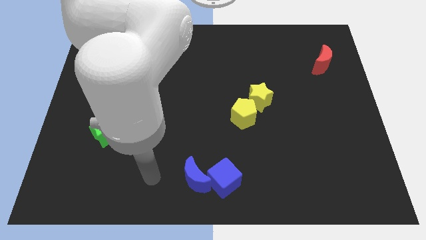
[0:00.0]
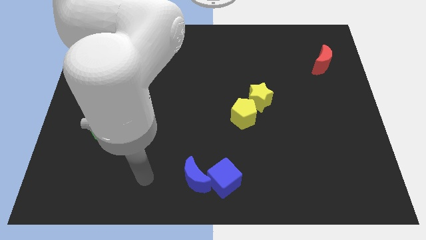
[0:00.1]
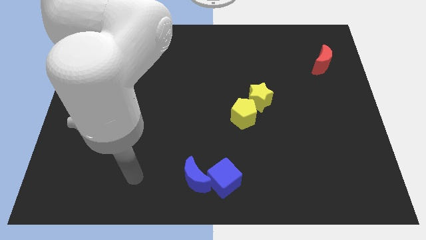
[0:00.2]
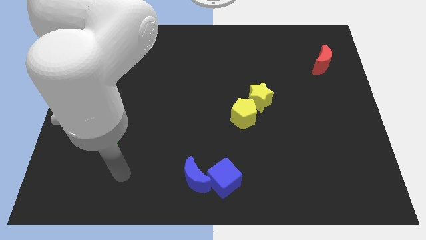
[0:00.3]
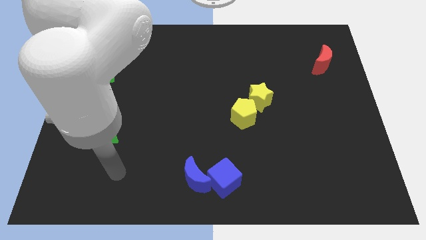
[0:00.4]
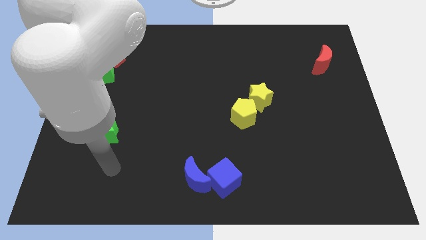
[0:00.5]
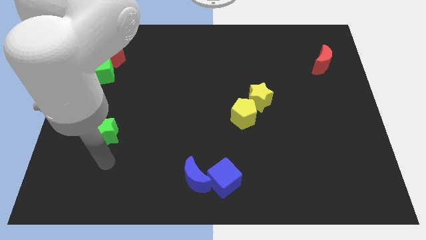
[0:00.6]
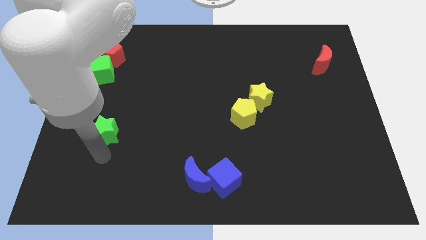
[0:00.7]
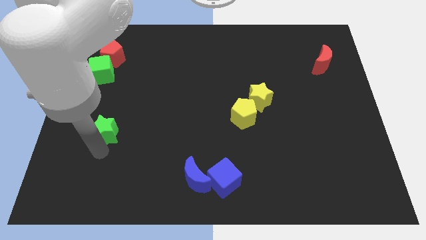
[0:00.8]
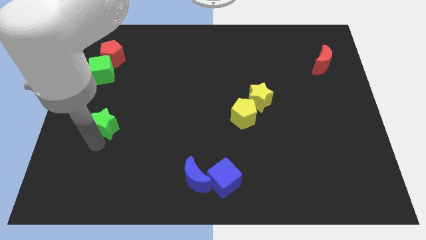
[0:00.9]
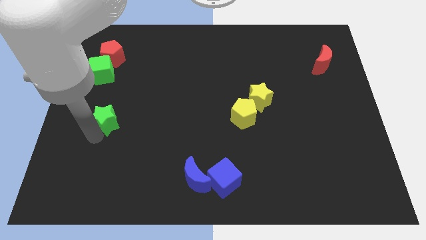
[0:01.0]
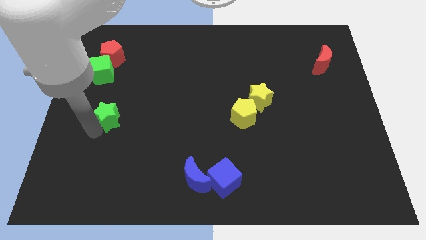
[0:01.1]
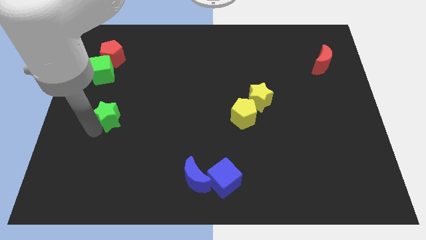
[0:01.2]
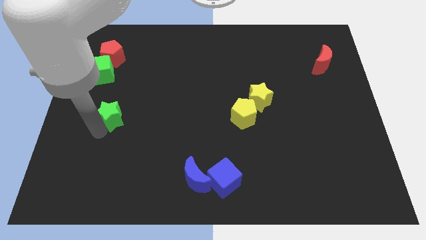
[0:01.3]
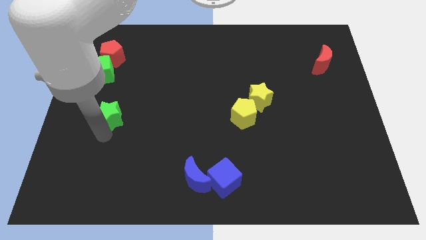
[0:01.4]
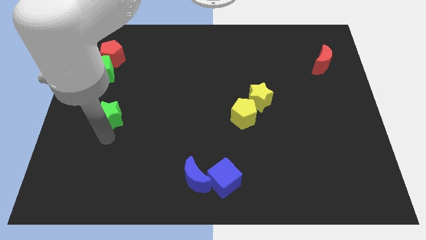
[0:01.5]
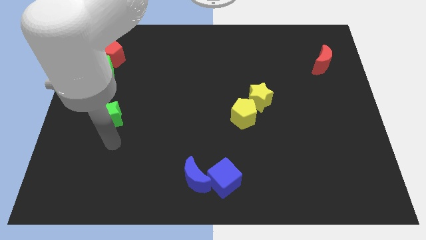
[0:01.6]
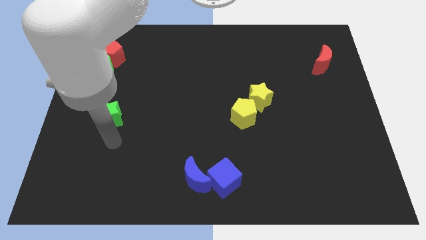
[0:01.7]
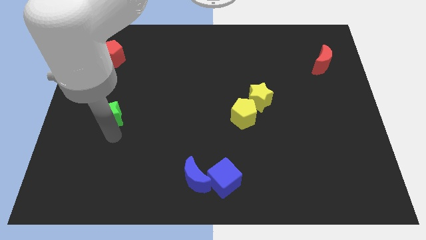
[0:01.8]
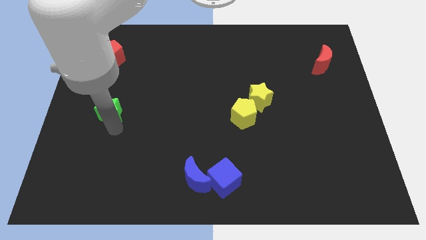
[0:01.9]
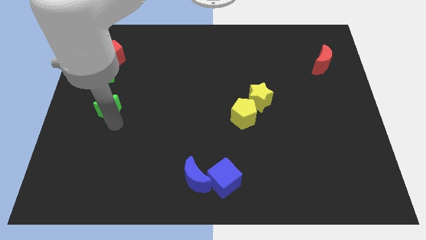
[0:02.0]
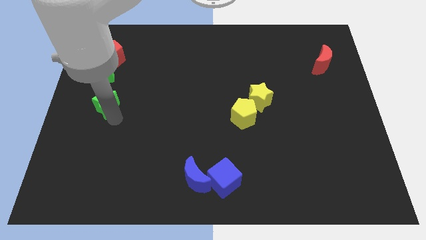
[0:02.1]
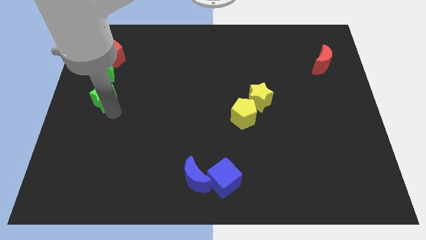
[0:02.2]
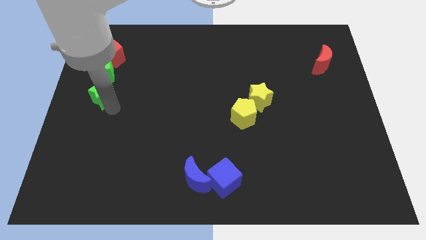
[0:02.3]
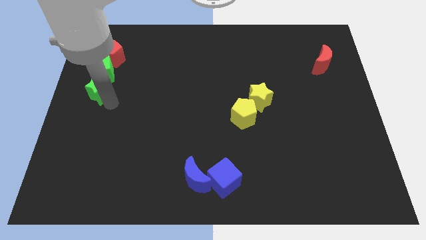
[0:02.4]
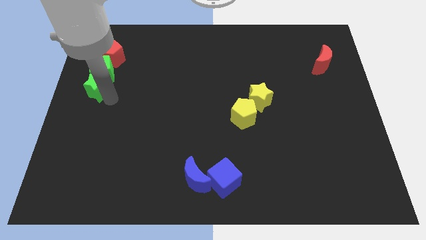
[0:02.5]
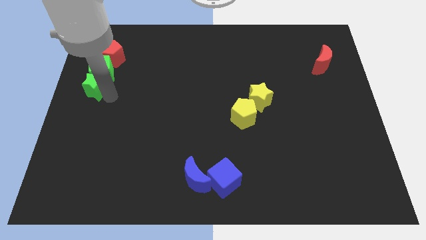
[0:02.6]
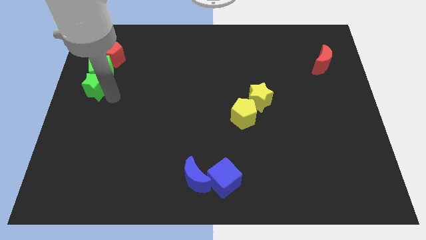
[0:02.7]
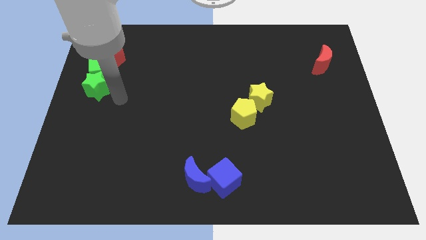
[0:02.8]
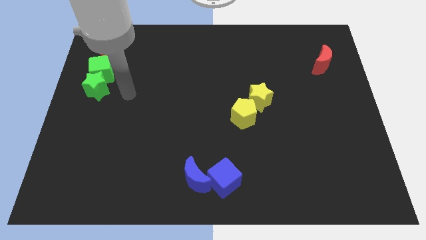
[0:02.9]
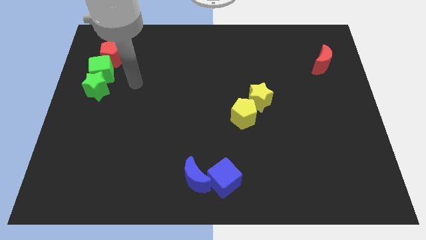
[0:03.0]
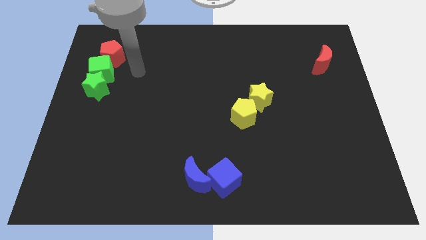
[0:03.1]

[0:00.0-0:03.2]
place green star to the bottom of green cube

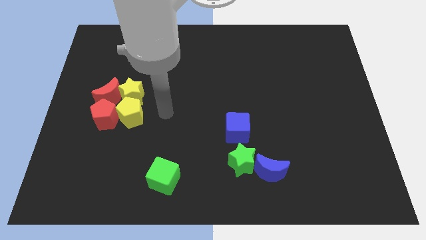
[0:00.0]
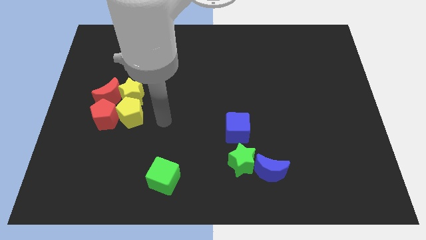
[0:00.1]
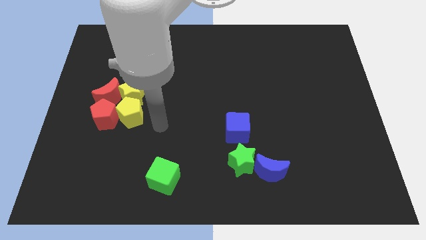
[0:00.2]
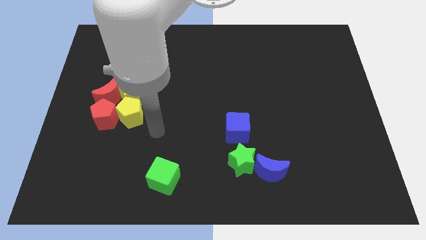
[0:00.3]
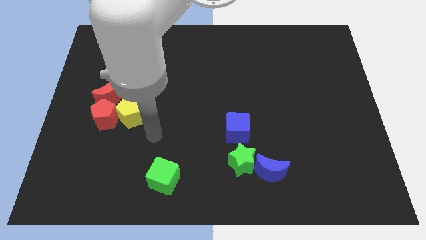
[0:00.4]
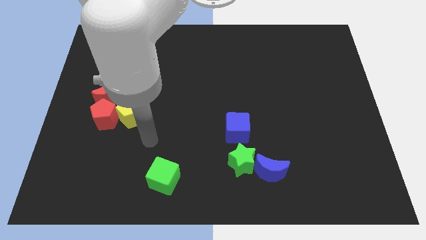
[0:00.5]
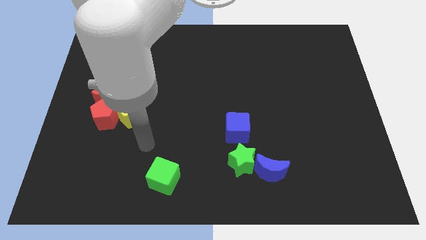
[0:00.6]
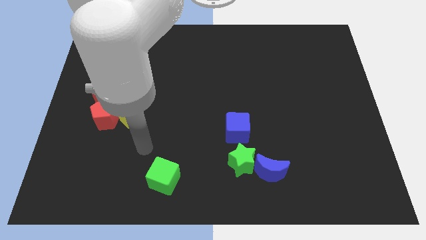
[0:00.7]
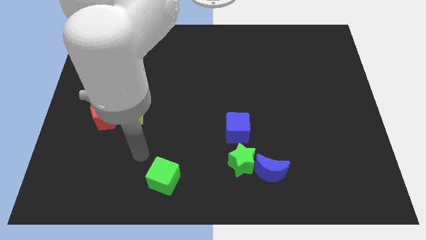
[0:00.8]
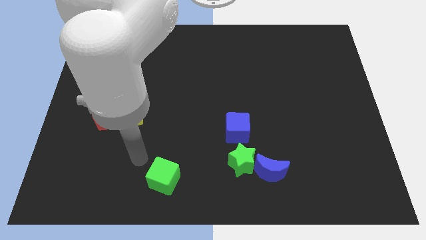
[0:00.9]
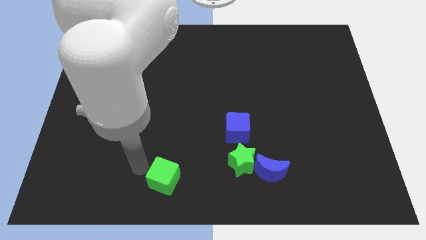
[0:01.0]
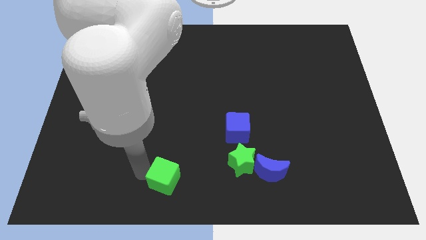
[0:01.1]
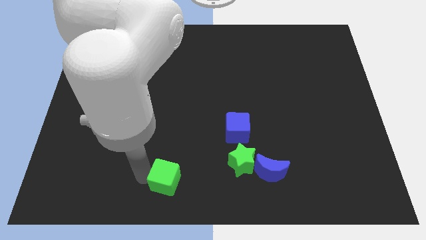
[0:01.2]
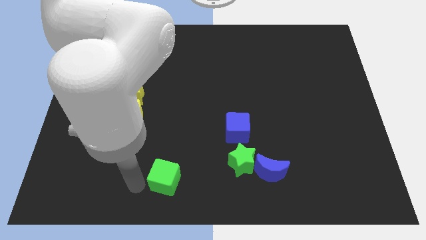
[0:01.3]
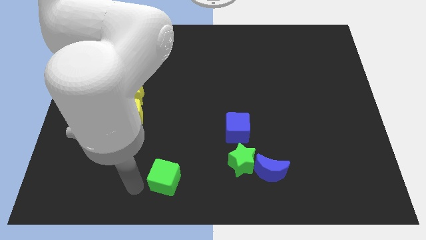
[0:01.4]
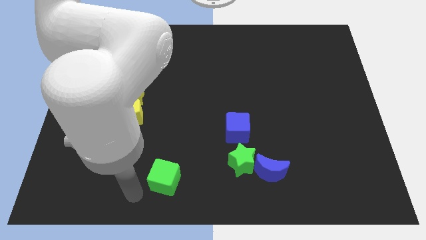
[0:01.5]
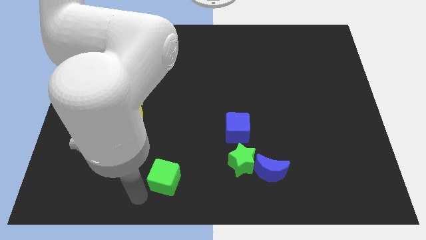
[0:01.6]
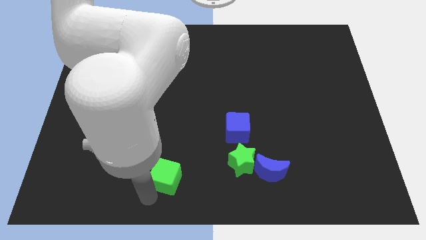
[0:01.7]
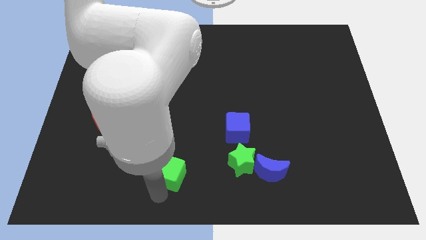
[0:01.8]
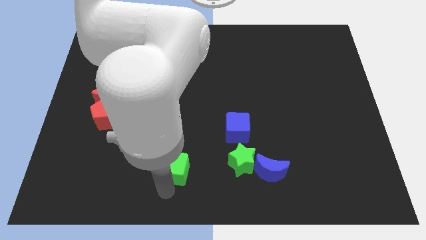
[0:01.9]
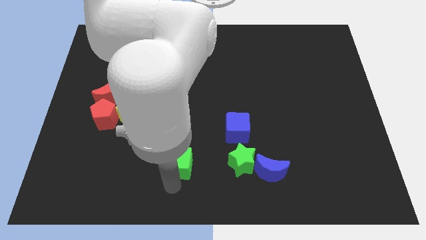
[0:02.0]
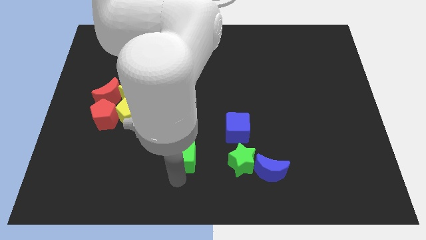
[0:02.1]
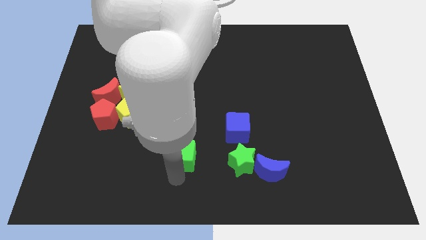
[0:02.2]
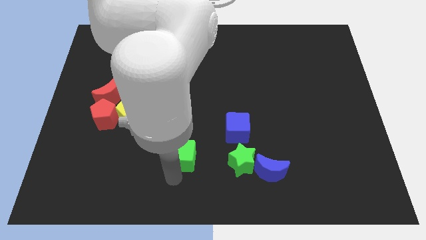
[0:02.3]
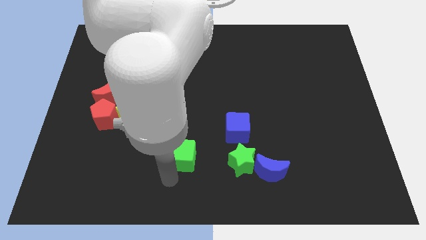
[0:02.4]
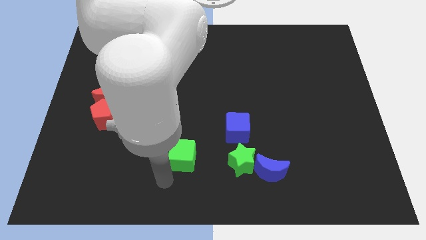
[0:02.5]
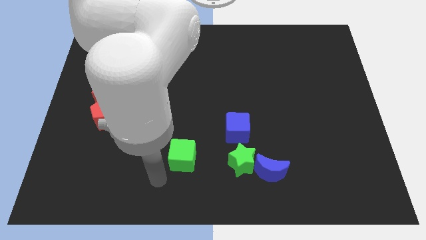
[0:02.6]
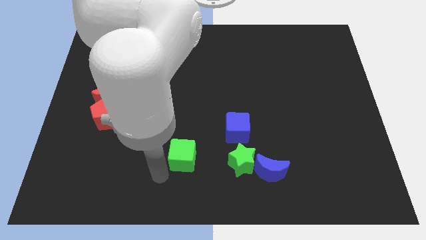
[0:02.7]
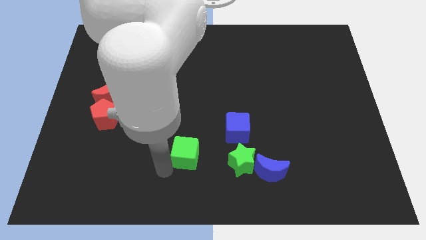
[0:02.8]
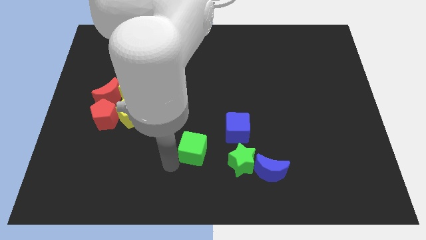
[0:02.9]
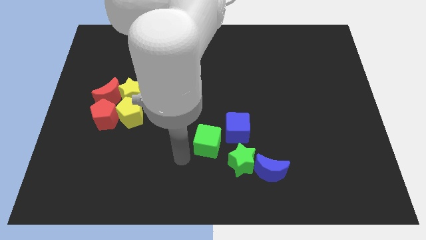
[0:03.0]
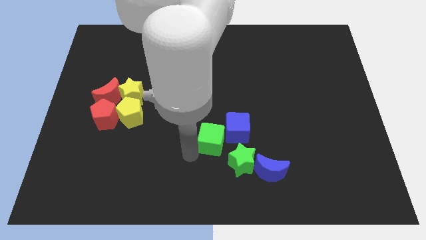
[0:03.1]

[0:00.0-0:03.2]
move green cube towards blue cube

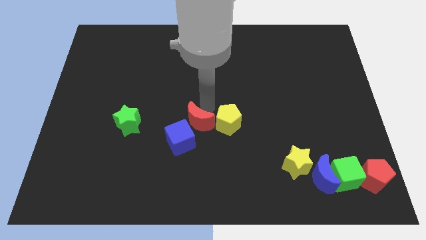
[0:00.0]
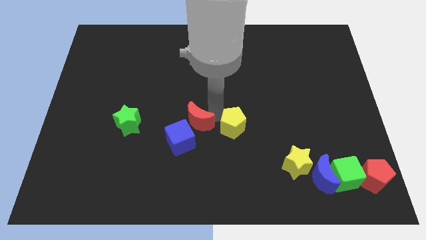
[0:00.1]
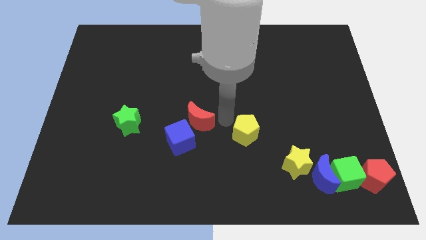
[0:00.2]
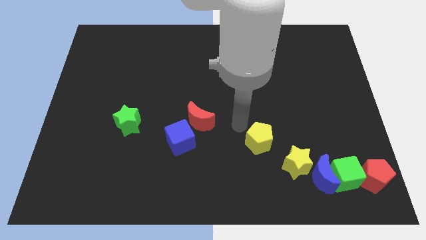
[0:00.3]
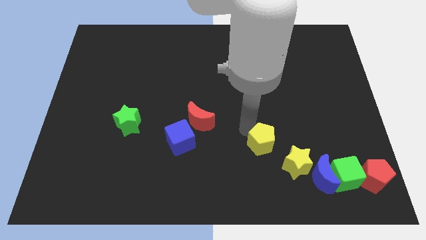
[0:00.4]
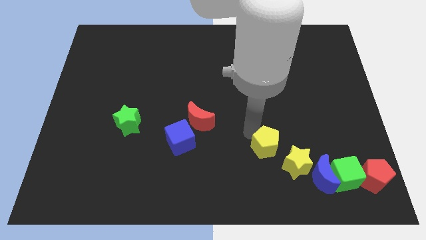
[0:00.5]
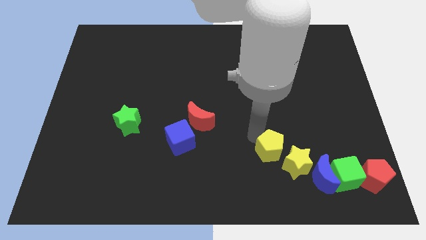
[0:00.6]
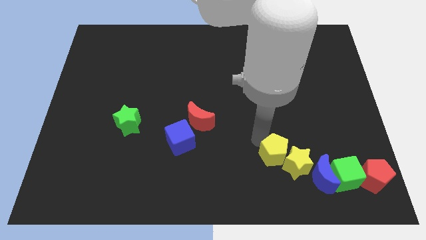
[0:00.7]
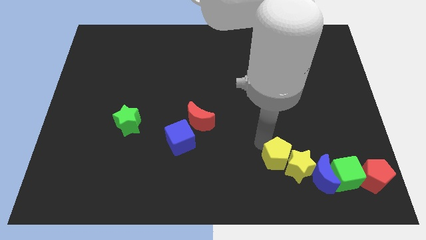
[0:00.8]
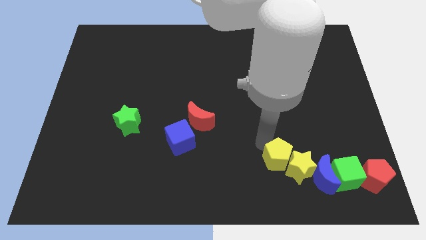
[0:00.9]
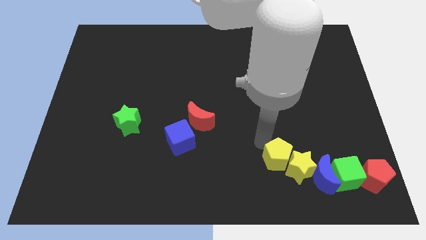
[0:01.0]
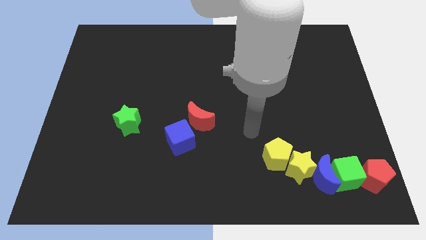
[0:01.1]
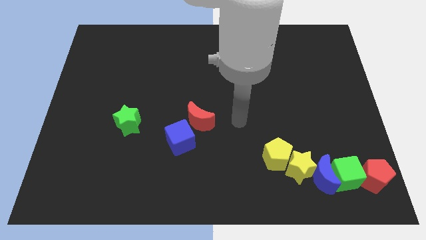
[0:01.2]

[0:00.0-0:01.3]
push the yellow pentagon into the yellow star

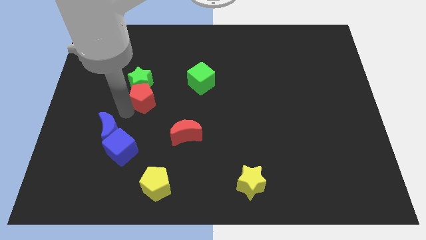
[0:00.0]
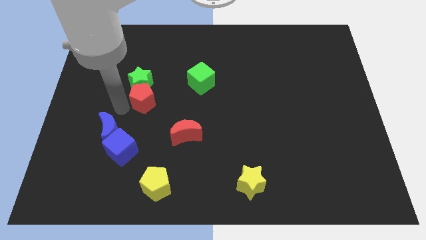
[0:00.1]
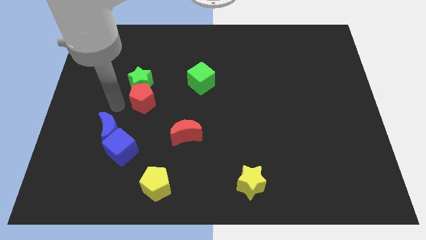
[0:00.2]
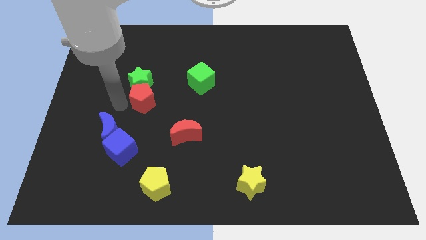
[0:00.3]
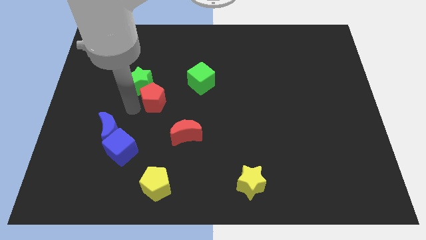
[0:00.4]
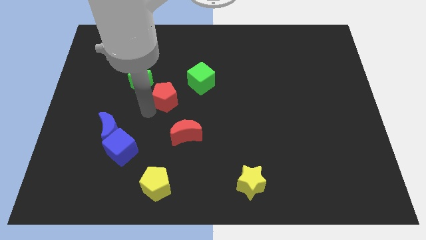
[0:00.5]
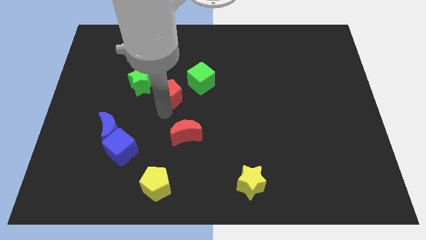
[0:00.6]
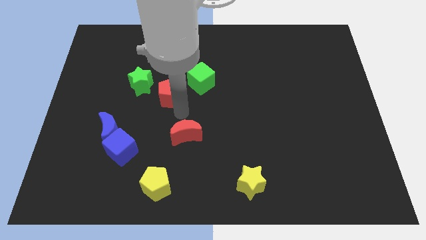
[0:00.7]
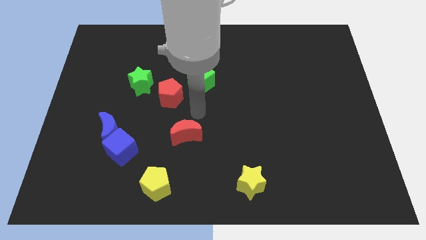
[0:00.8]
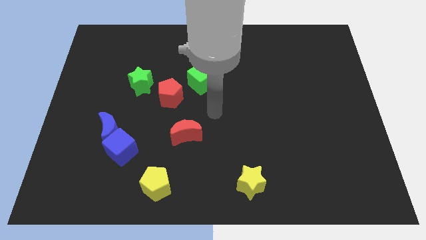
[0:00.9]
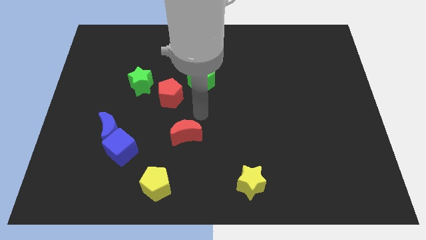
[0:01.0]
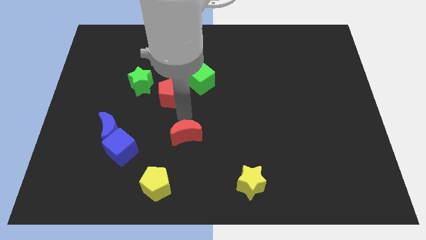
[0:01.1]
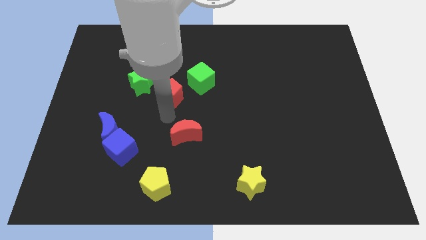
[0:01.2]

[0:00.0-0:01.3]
separate red pentagon from the green star
